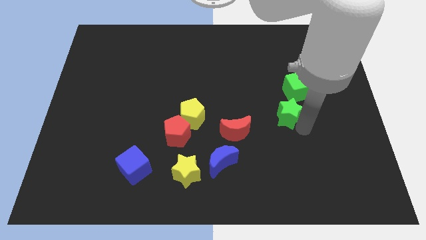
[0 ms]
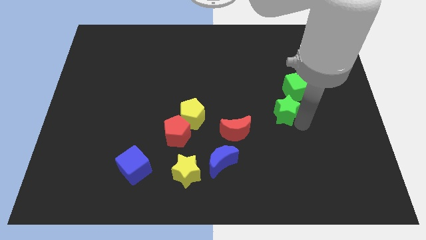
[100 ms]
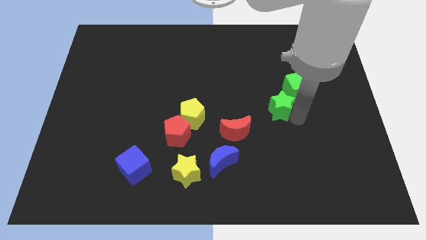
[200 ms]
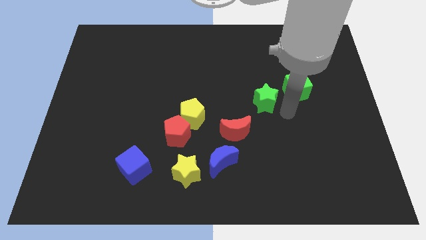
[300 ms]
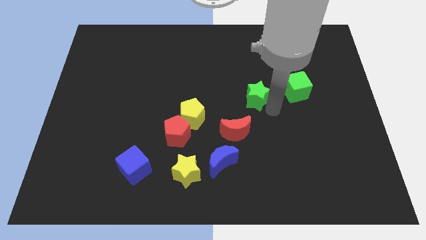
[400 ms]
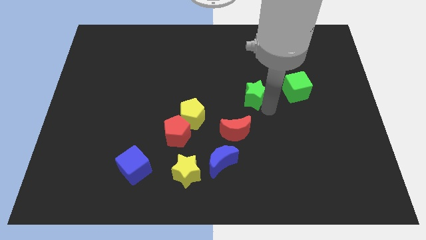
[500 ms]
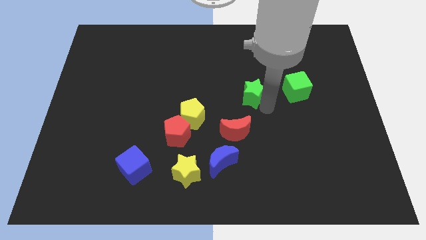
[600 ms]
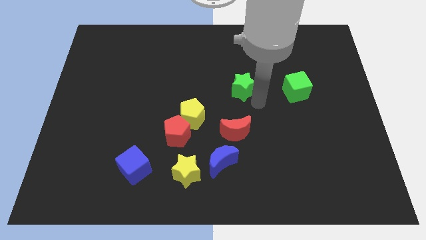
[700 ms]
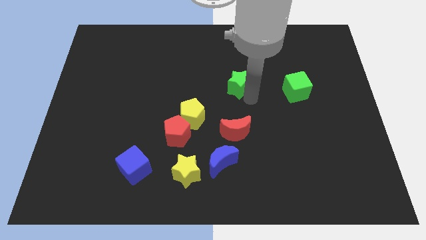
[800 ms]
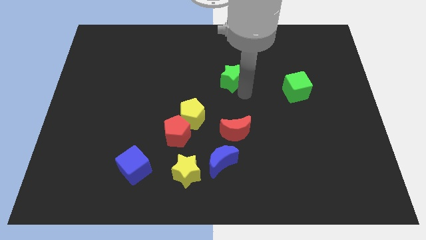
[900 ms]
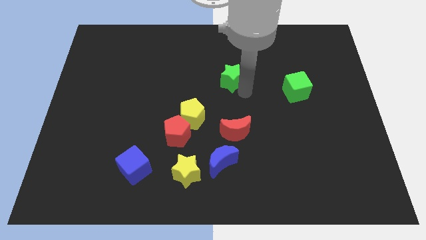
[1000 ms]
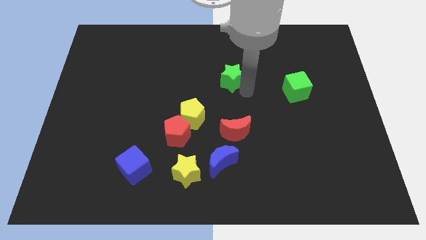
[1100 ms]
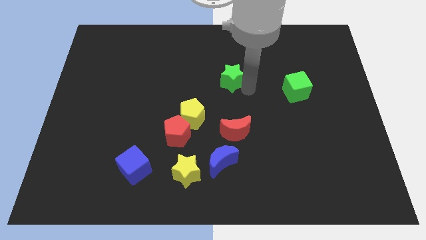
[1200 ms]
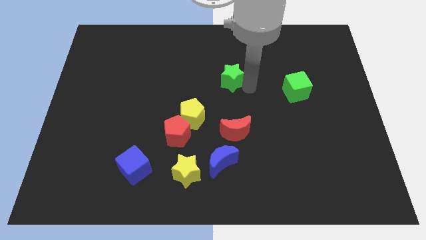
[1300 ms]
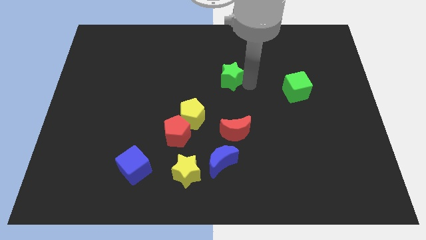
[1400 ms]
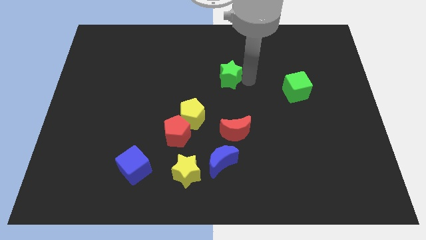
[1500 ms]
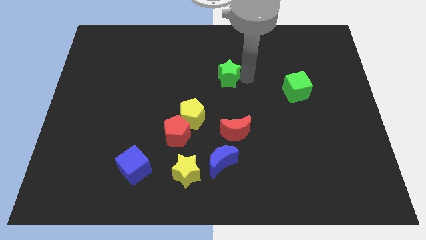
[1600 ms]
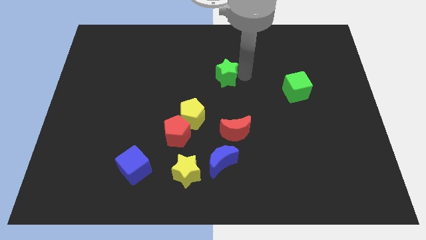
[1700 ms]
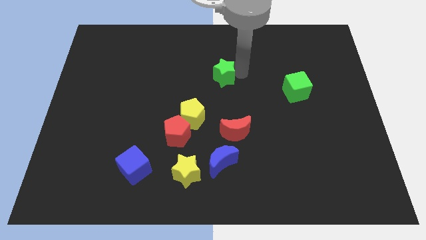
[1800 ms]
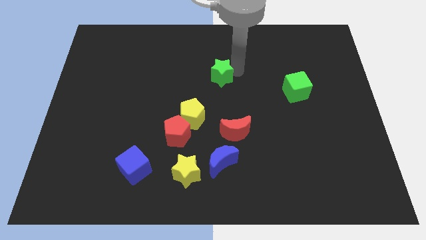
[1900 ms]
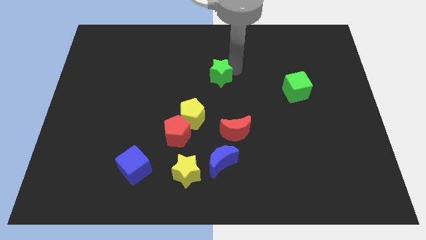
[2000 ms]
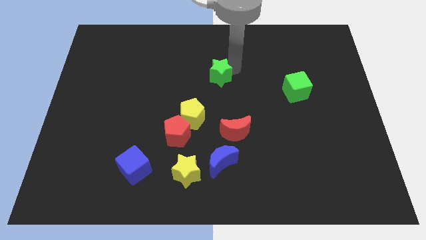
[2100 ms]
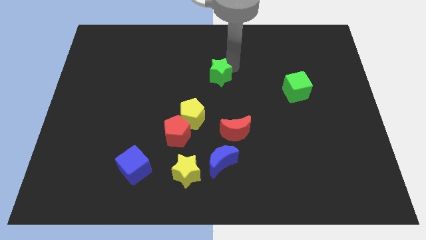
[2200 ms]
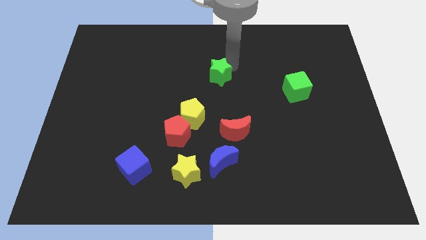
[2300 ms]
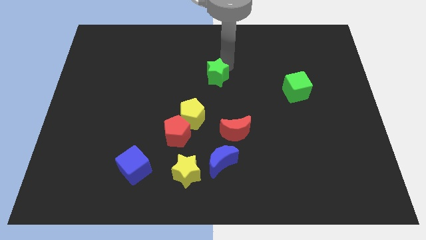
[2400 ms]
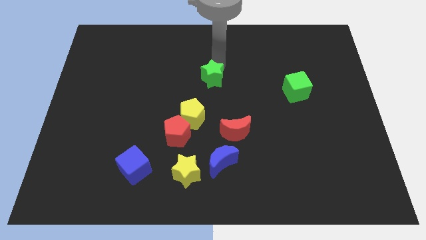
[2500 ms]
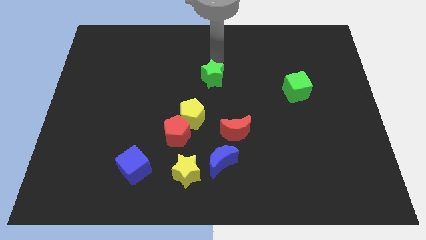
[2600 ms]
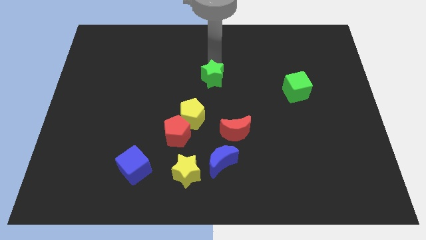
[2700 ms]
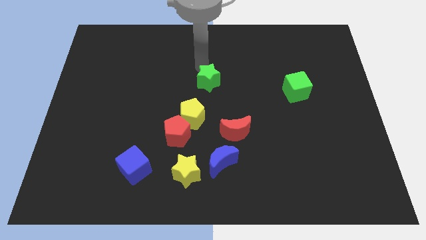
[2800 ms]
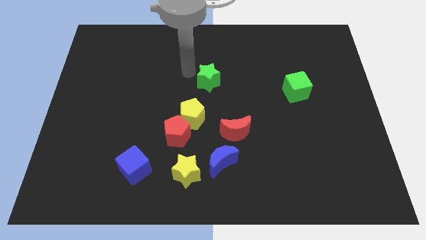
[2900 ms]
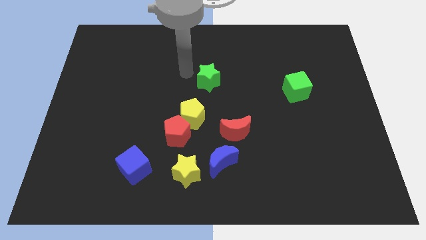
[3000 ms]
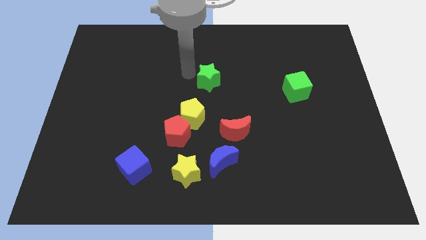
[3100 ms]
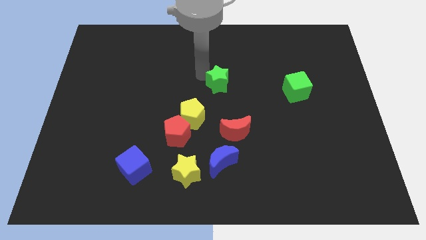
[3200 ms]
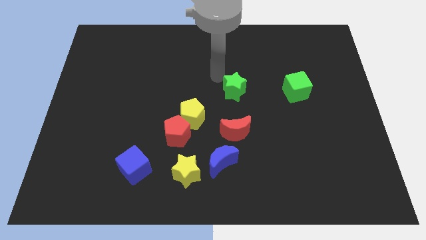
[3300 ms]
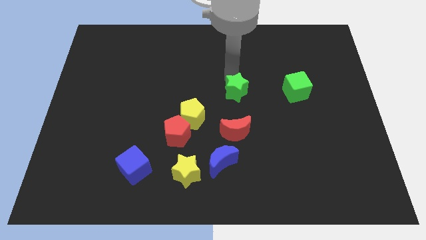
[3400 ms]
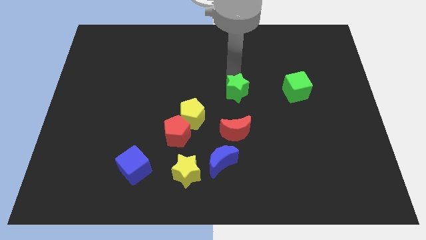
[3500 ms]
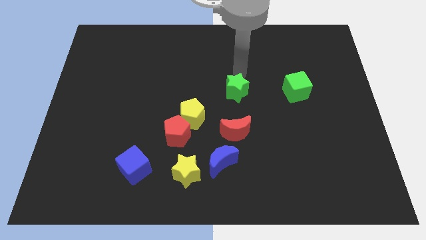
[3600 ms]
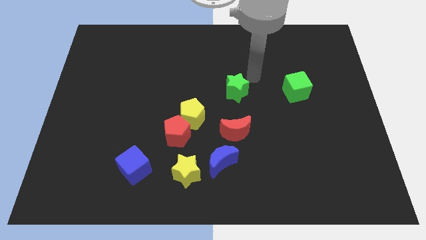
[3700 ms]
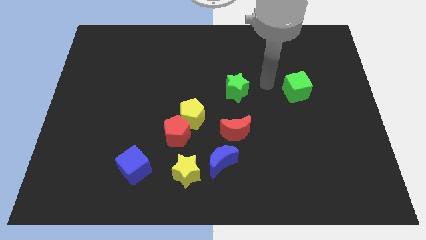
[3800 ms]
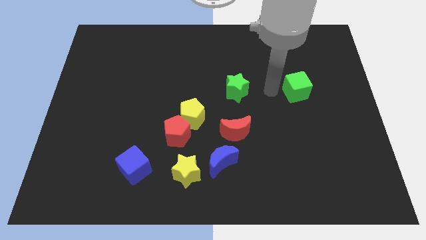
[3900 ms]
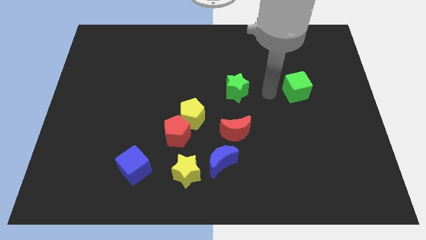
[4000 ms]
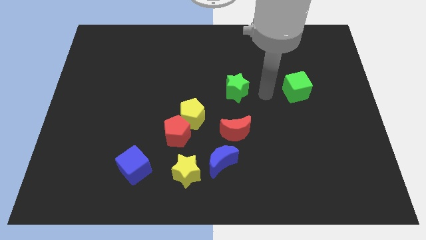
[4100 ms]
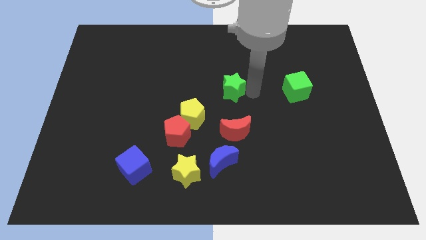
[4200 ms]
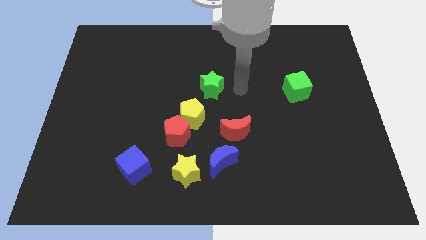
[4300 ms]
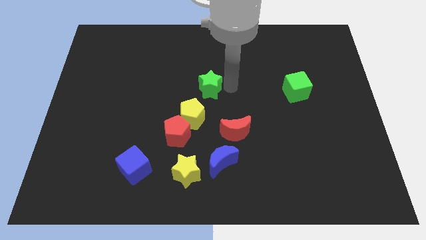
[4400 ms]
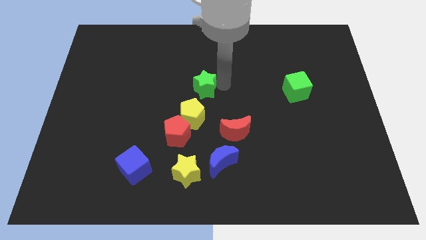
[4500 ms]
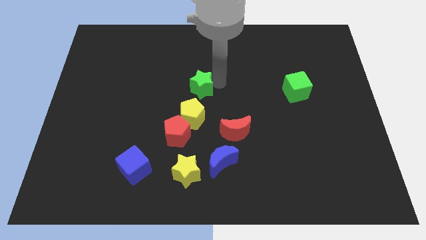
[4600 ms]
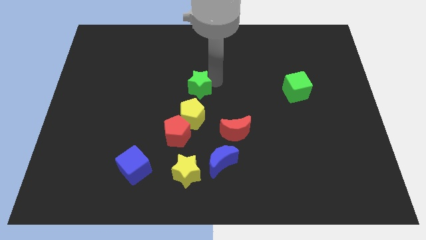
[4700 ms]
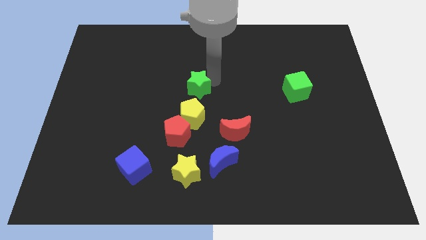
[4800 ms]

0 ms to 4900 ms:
place the green star at the top of yellow pentagon

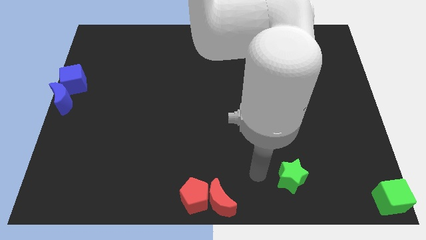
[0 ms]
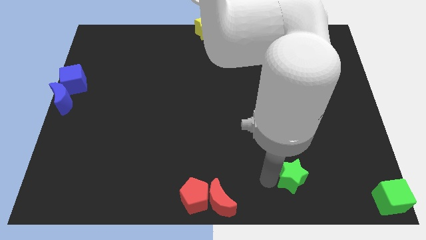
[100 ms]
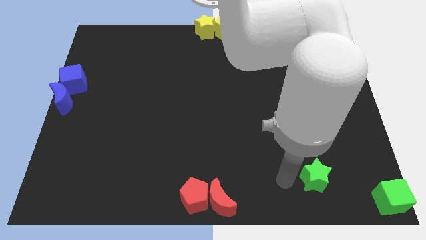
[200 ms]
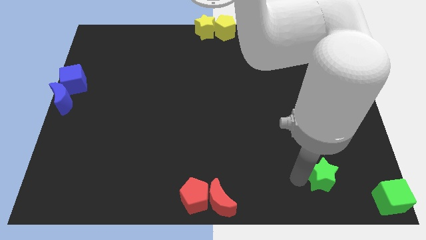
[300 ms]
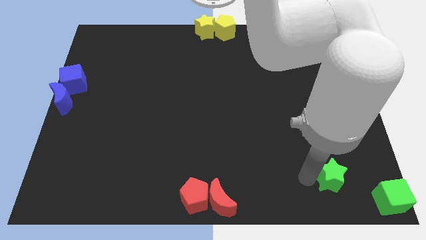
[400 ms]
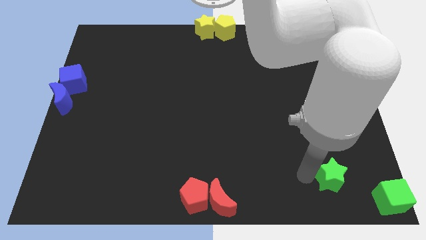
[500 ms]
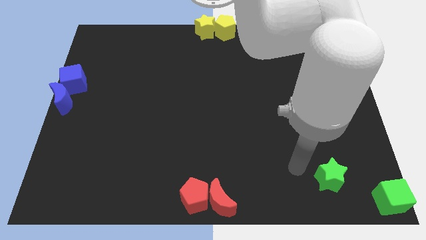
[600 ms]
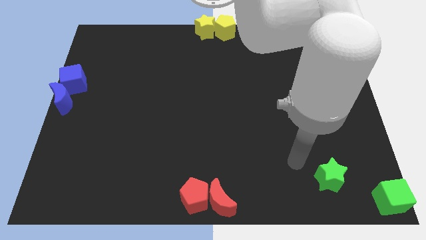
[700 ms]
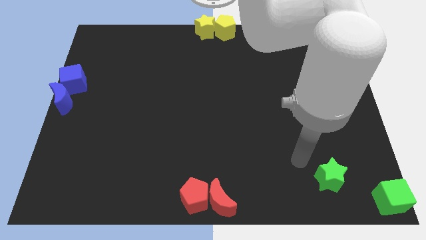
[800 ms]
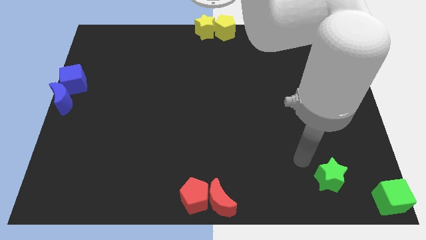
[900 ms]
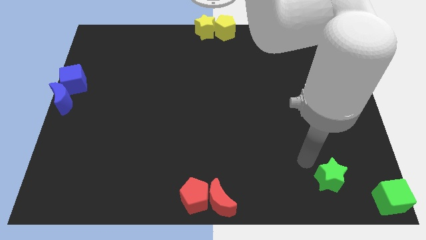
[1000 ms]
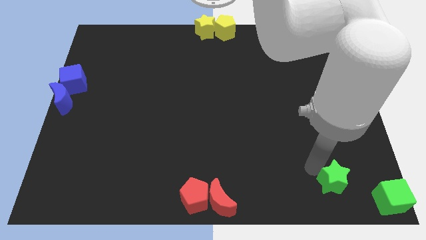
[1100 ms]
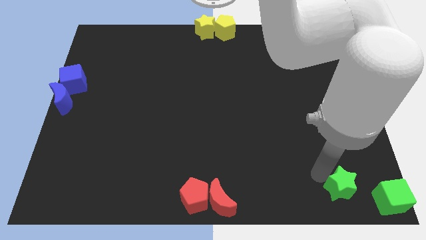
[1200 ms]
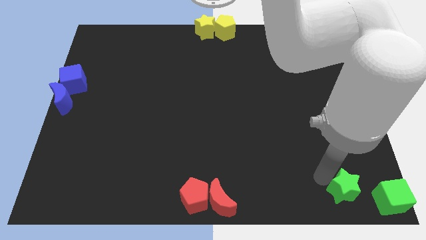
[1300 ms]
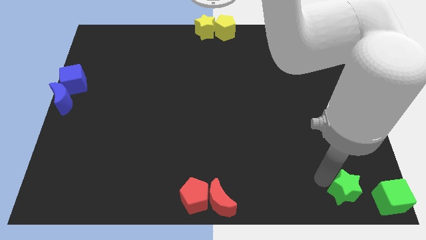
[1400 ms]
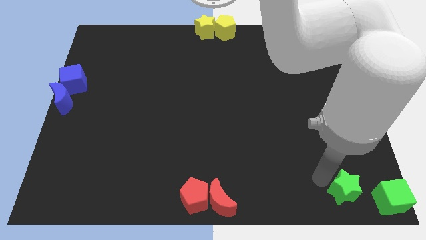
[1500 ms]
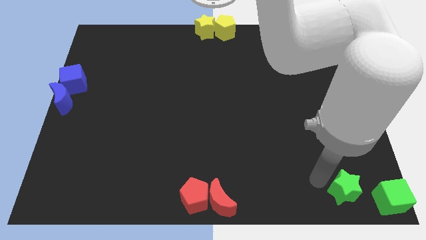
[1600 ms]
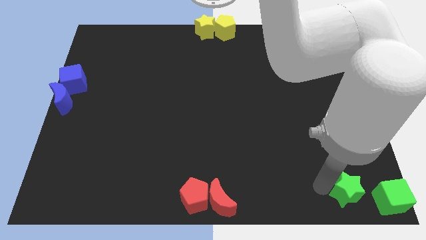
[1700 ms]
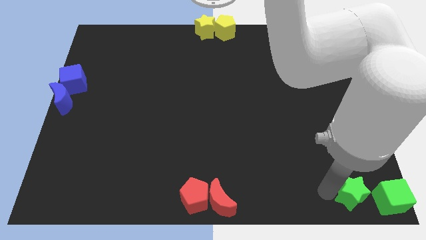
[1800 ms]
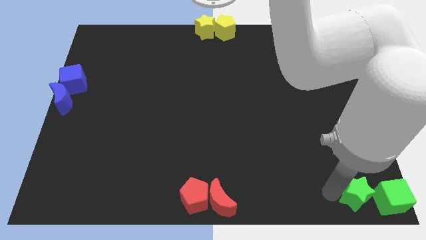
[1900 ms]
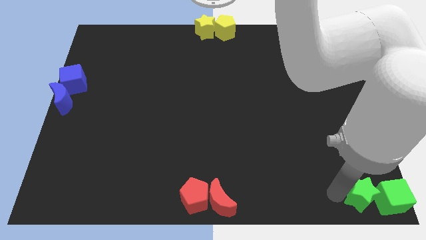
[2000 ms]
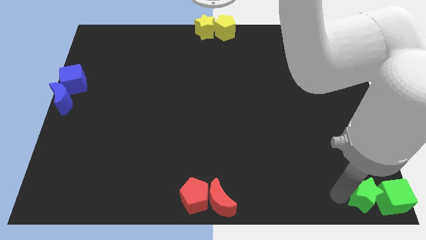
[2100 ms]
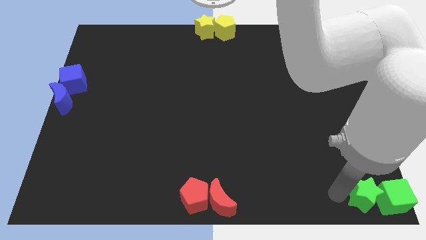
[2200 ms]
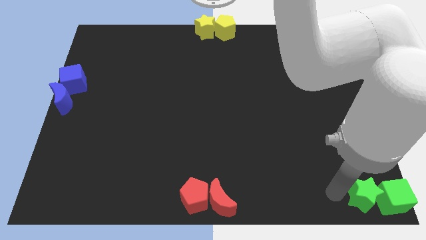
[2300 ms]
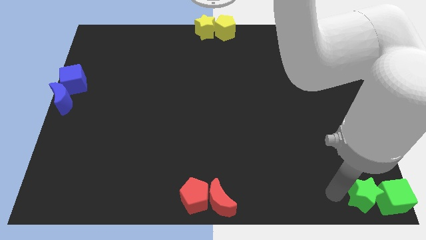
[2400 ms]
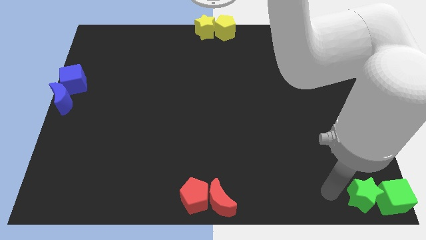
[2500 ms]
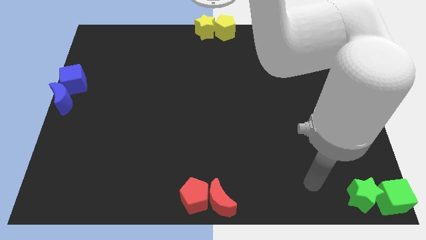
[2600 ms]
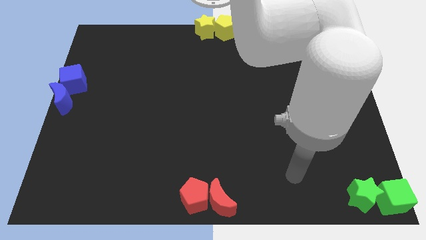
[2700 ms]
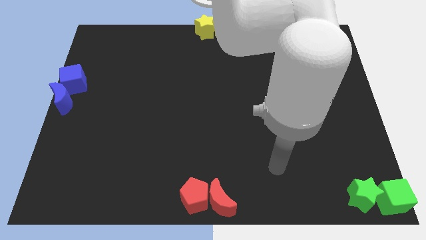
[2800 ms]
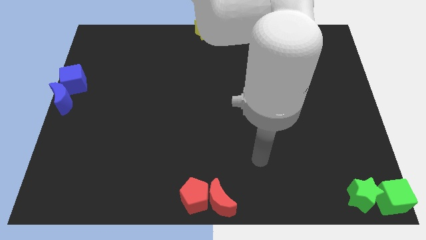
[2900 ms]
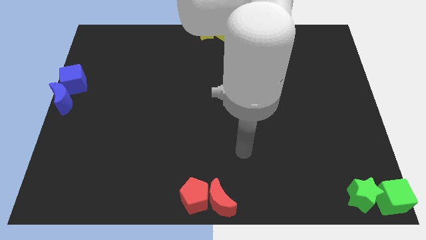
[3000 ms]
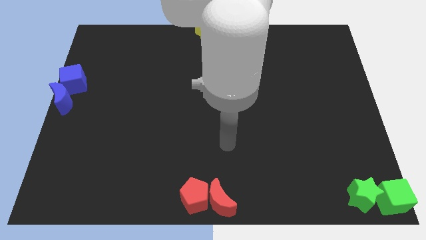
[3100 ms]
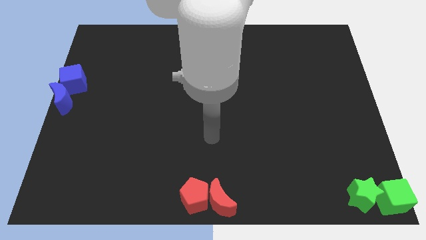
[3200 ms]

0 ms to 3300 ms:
place the yellow star left to the green cube

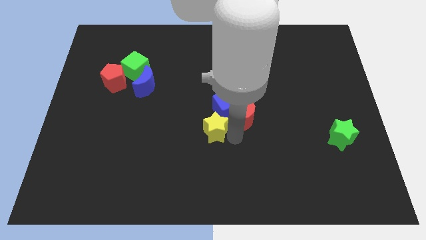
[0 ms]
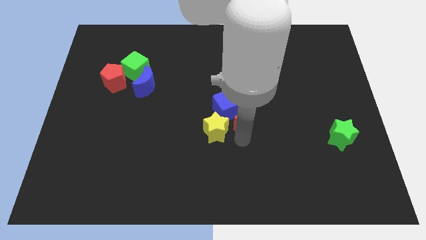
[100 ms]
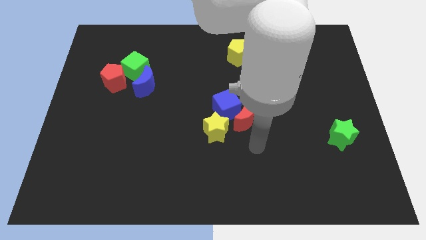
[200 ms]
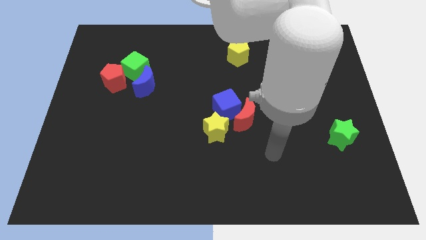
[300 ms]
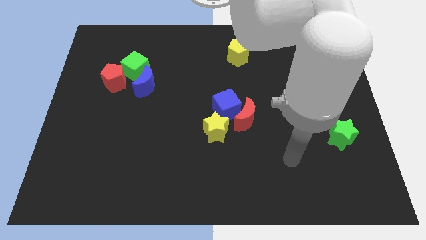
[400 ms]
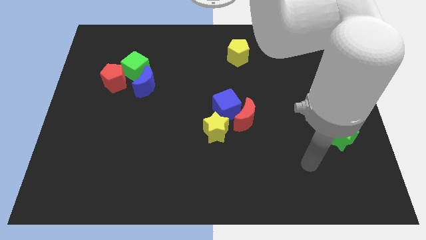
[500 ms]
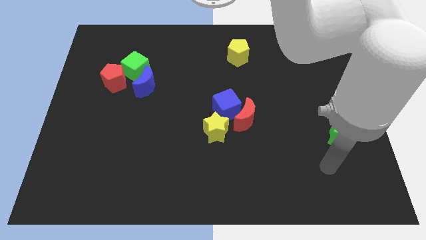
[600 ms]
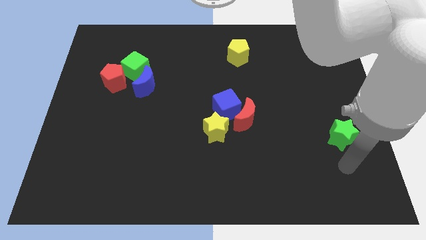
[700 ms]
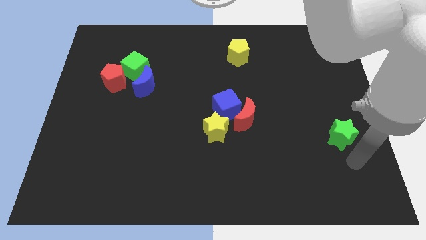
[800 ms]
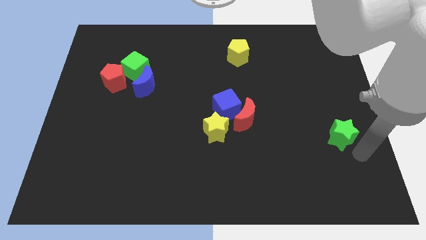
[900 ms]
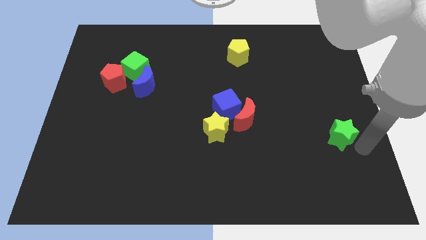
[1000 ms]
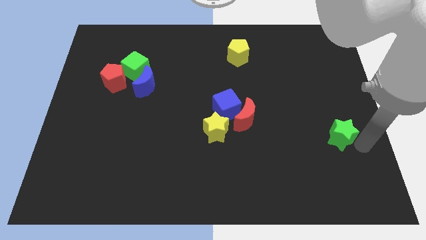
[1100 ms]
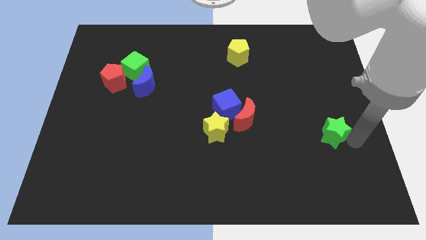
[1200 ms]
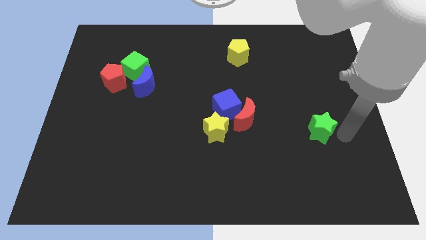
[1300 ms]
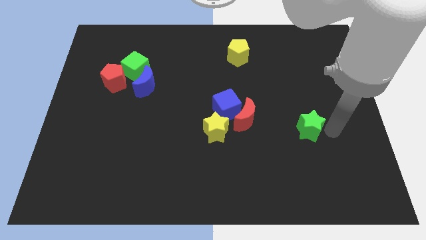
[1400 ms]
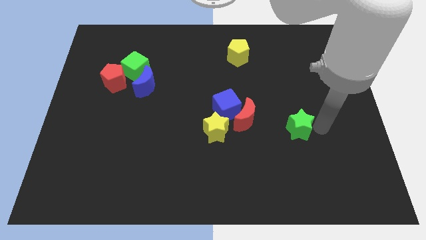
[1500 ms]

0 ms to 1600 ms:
move your arm away from the yellow star
